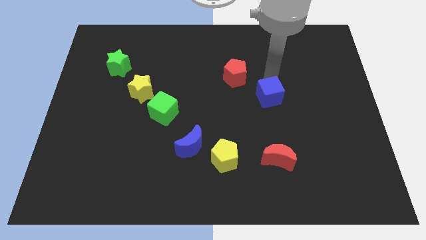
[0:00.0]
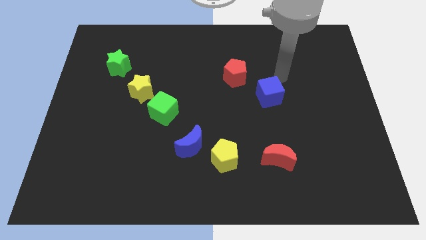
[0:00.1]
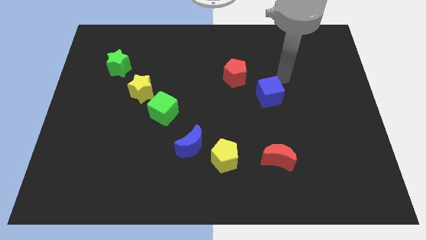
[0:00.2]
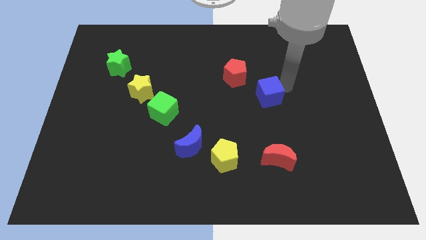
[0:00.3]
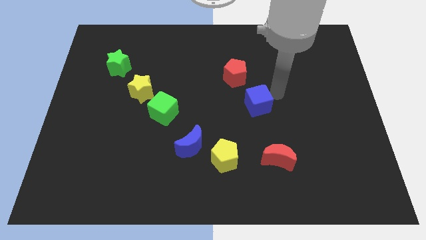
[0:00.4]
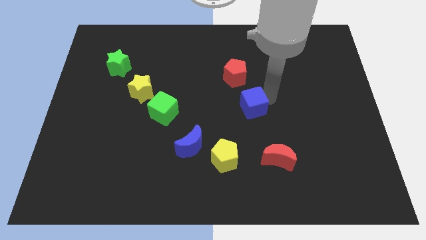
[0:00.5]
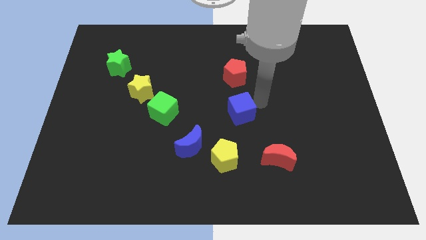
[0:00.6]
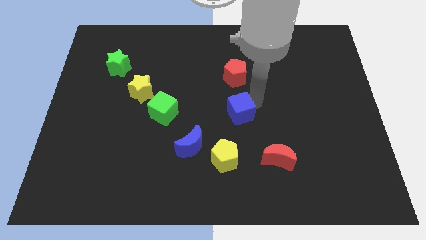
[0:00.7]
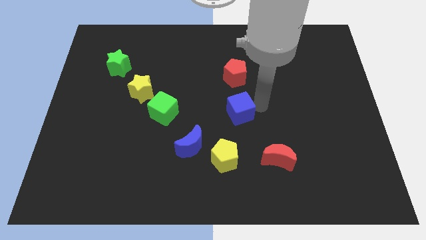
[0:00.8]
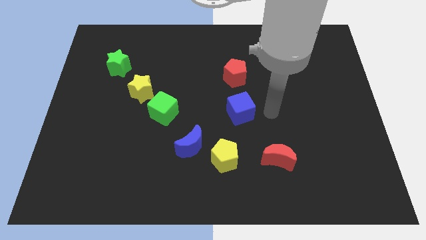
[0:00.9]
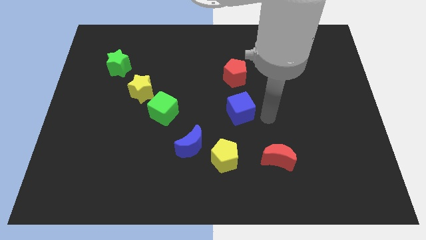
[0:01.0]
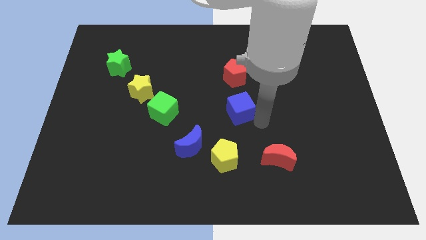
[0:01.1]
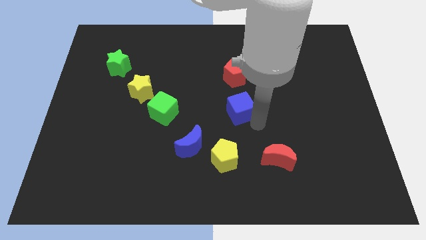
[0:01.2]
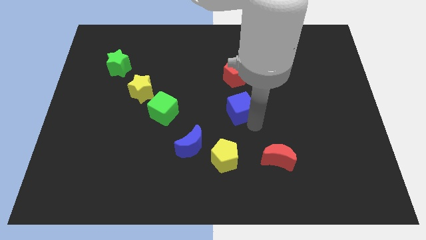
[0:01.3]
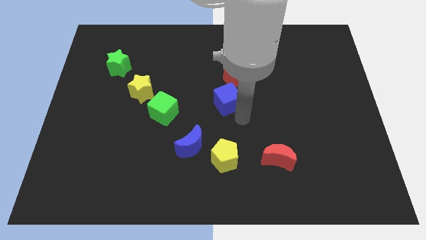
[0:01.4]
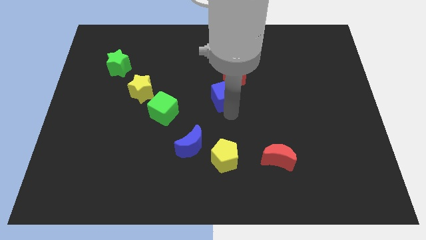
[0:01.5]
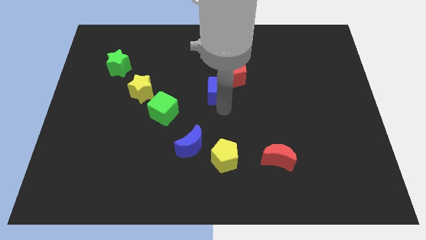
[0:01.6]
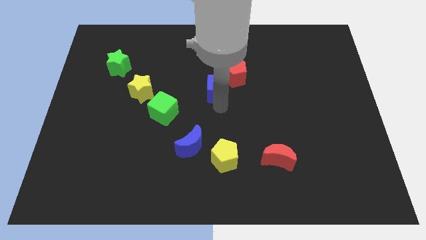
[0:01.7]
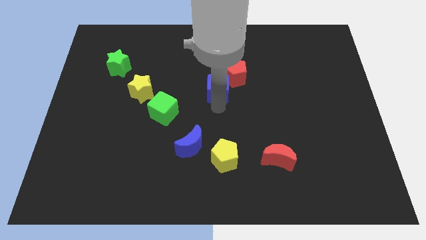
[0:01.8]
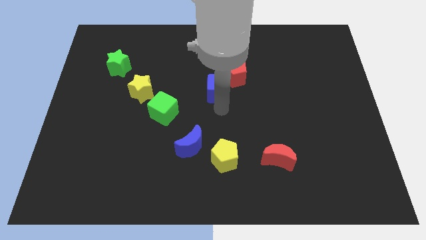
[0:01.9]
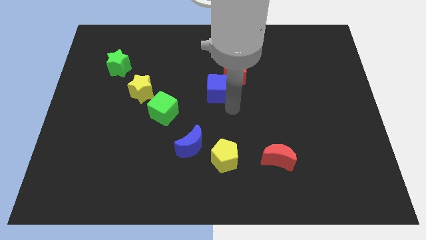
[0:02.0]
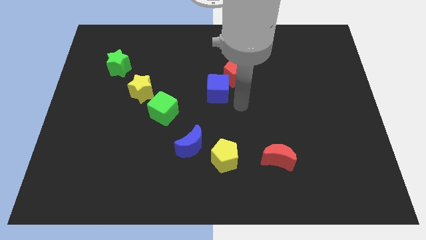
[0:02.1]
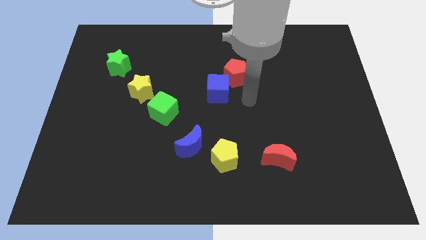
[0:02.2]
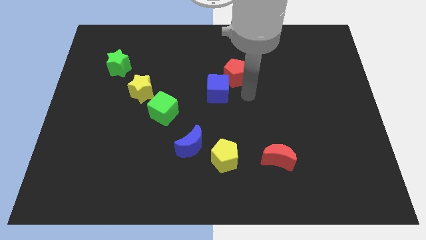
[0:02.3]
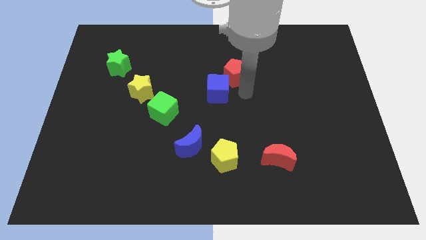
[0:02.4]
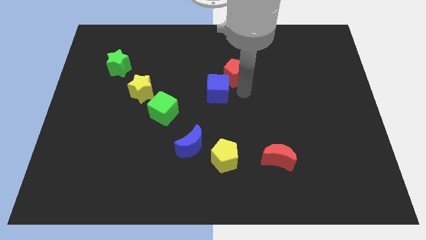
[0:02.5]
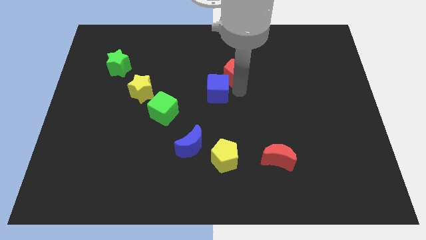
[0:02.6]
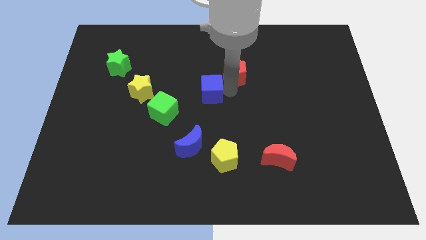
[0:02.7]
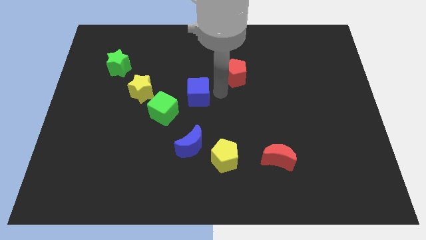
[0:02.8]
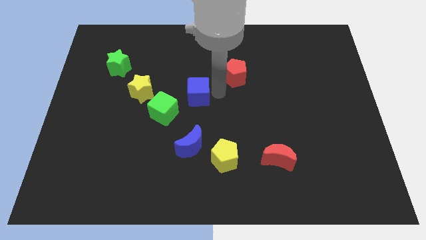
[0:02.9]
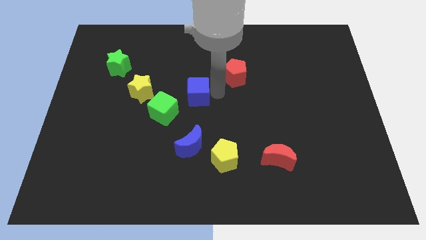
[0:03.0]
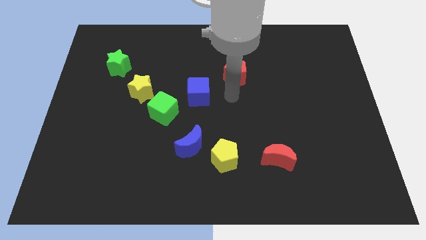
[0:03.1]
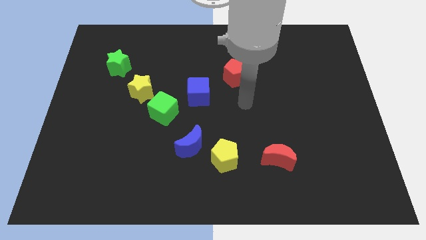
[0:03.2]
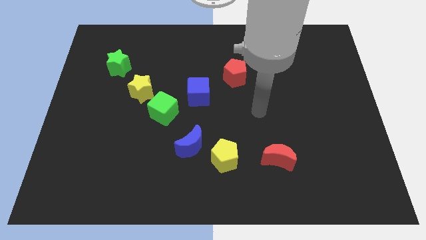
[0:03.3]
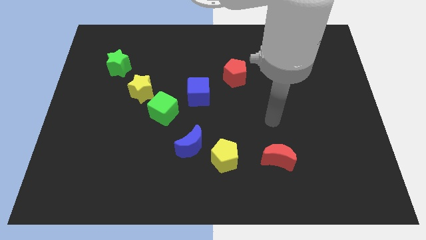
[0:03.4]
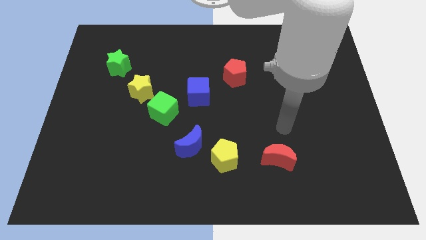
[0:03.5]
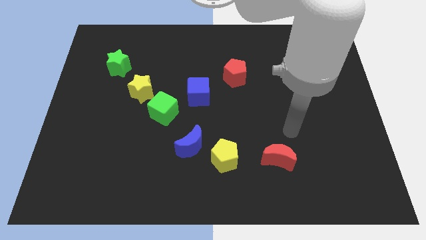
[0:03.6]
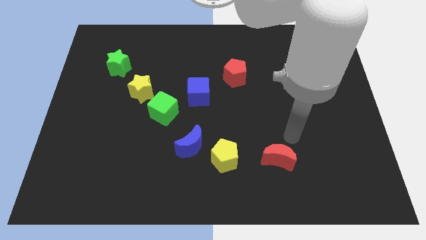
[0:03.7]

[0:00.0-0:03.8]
push the blue cube in between the green cube and the red pentagon

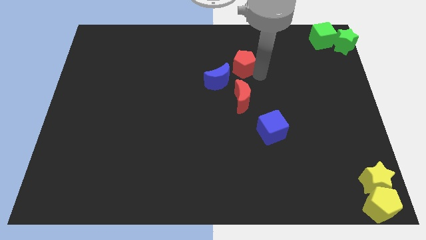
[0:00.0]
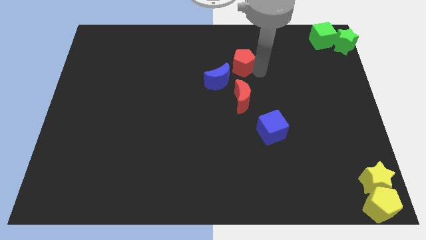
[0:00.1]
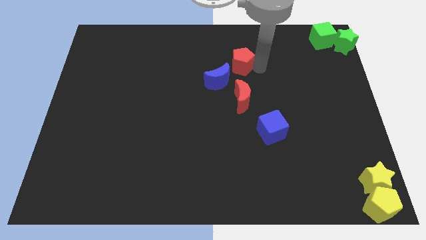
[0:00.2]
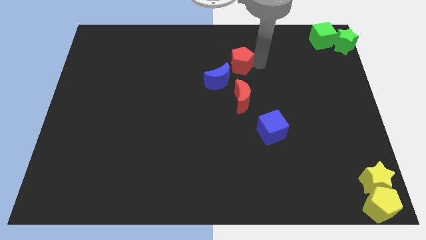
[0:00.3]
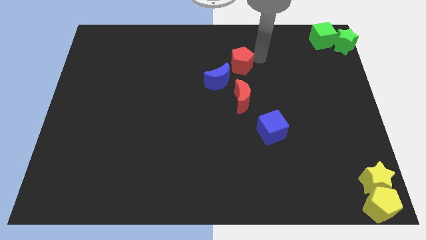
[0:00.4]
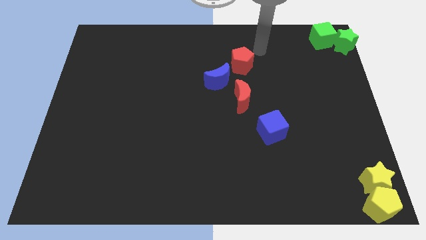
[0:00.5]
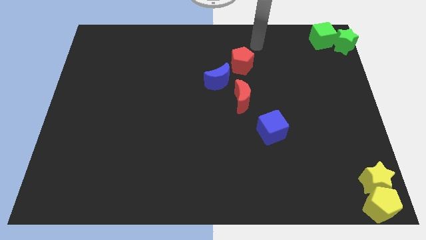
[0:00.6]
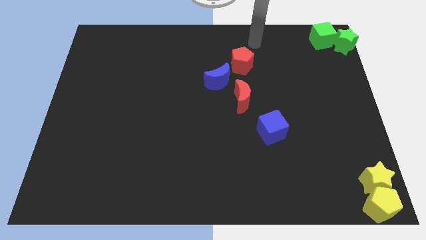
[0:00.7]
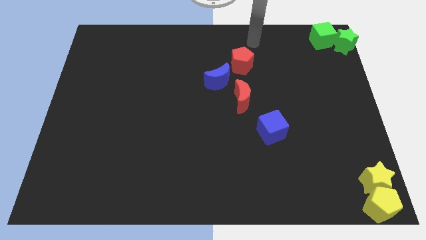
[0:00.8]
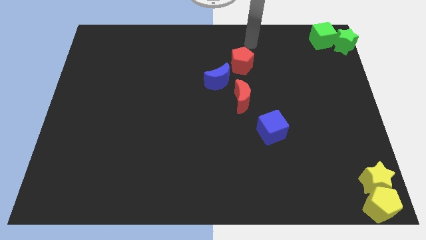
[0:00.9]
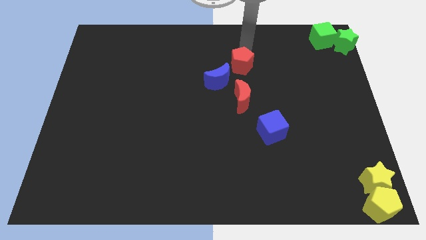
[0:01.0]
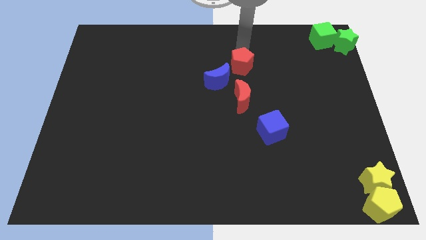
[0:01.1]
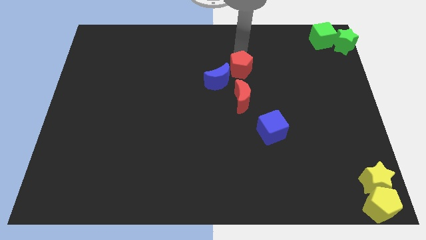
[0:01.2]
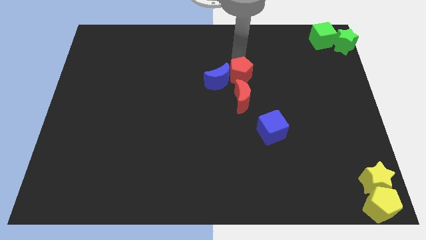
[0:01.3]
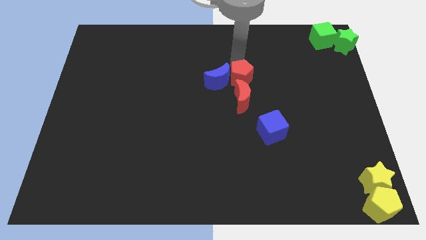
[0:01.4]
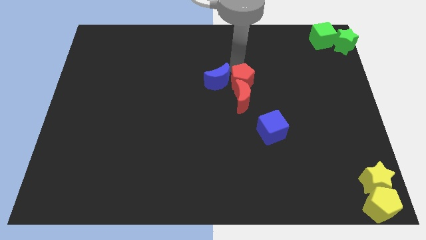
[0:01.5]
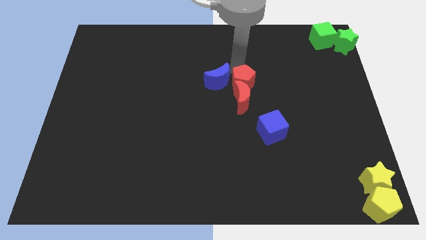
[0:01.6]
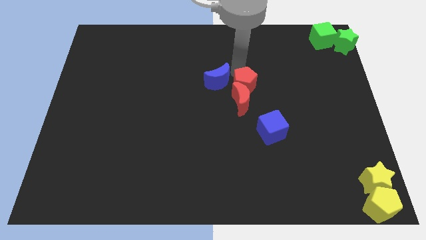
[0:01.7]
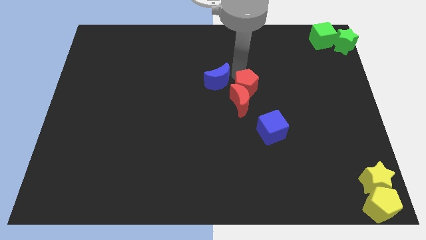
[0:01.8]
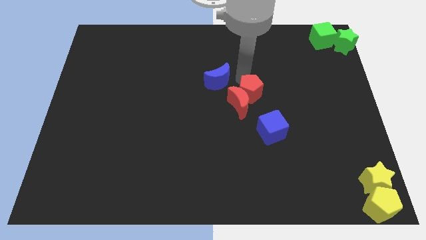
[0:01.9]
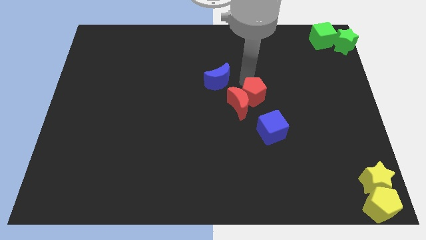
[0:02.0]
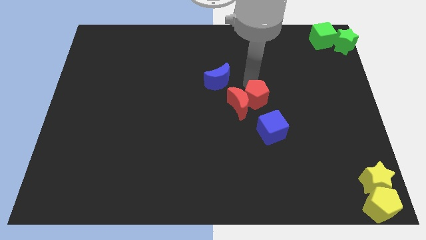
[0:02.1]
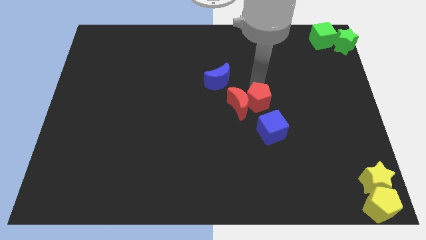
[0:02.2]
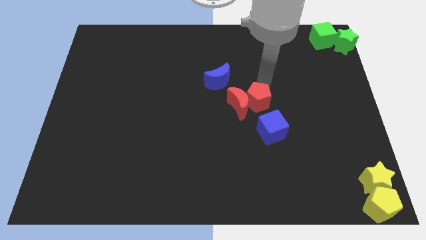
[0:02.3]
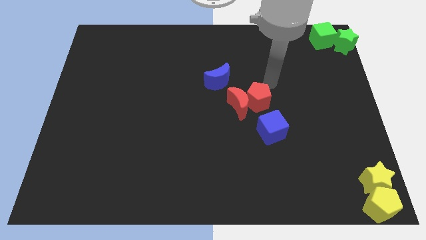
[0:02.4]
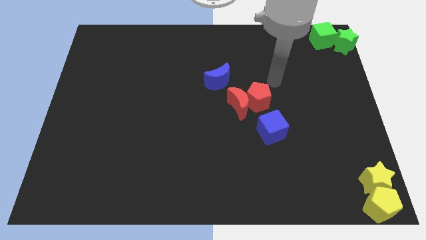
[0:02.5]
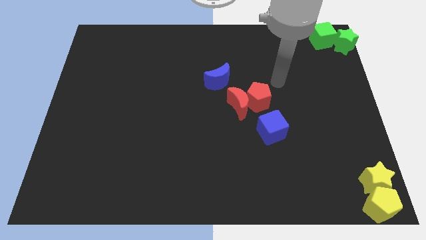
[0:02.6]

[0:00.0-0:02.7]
place the red blocks in between the blue blocks

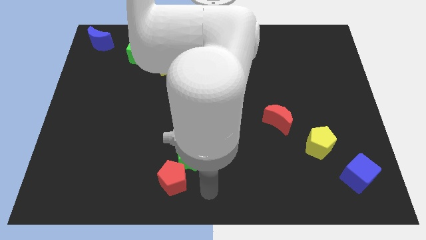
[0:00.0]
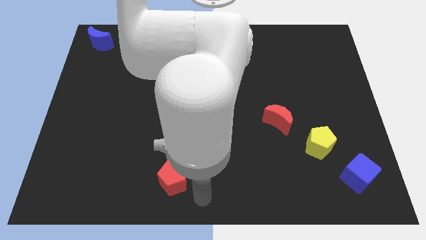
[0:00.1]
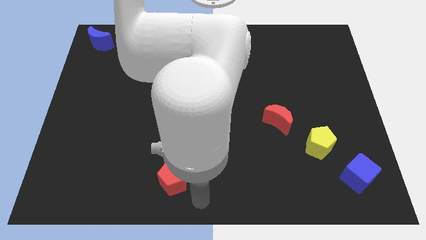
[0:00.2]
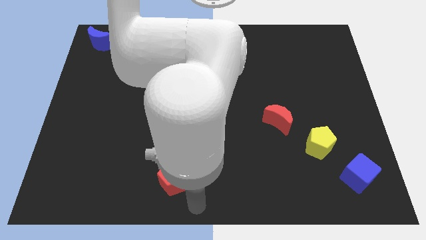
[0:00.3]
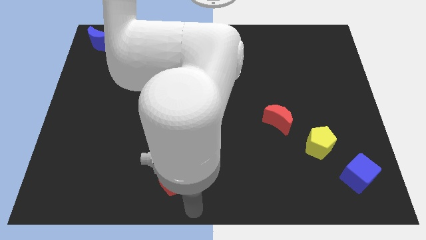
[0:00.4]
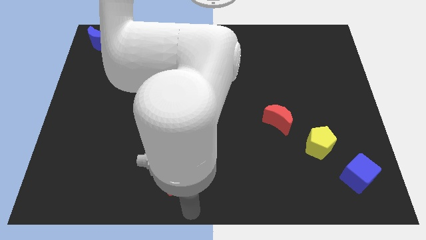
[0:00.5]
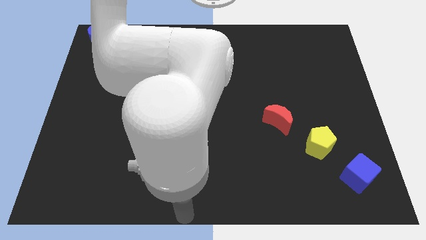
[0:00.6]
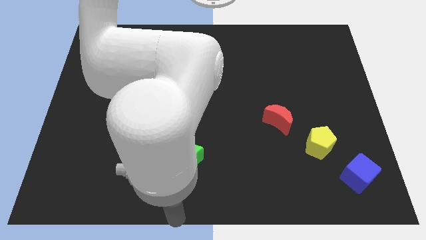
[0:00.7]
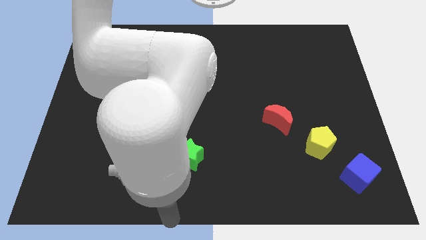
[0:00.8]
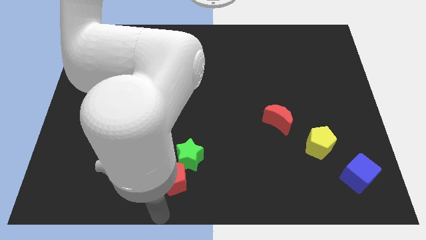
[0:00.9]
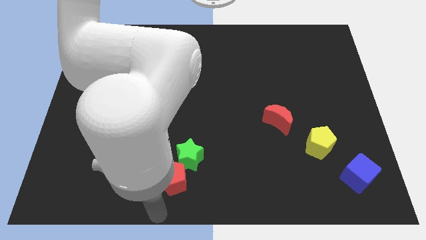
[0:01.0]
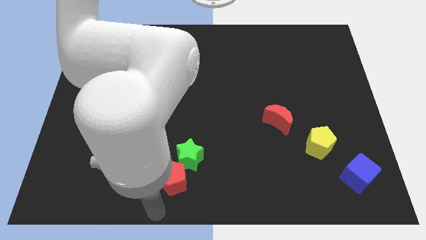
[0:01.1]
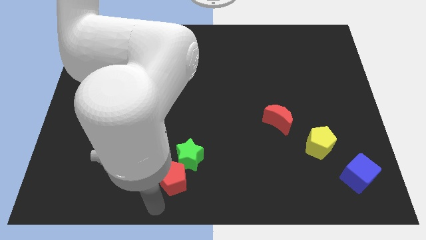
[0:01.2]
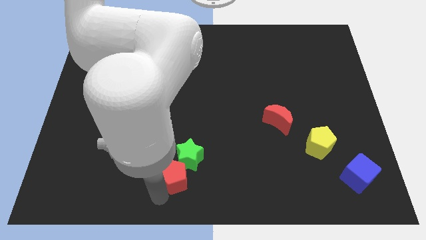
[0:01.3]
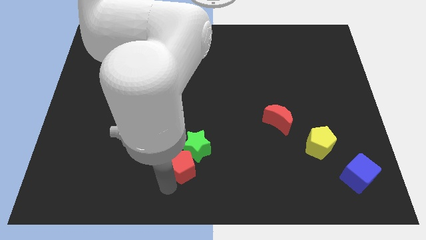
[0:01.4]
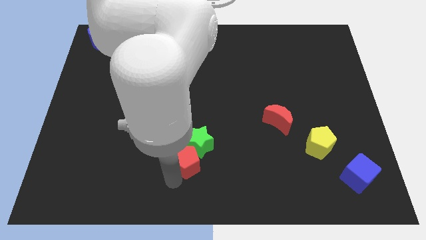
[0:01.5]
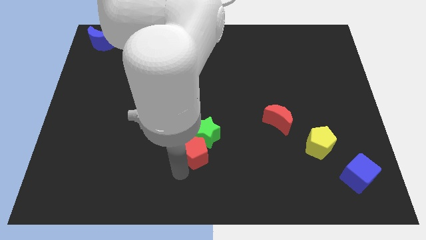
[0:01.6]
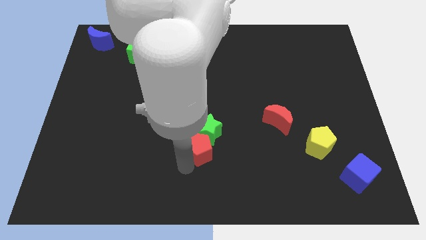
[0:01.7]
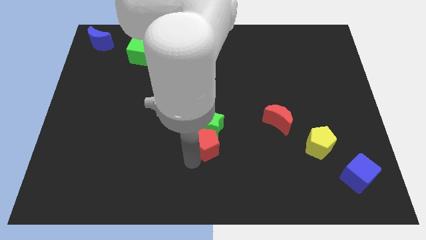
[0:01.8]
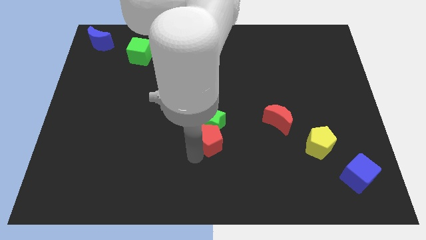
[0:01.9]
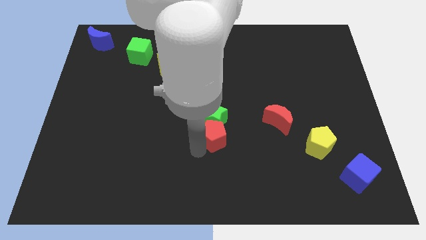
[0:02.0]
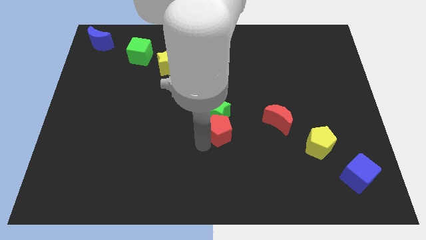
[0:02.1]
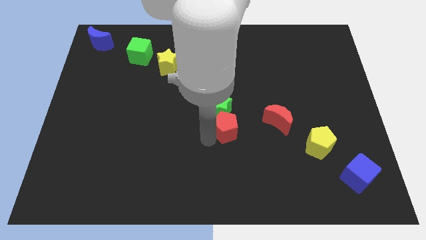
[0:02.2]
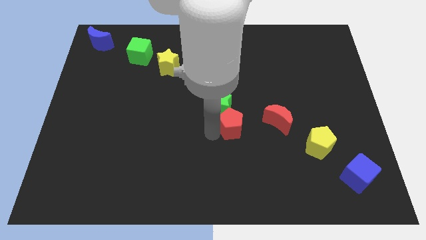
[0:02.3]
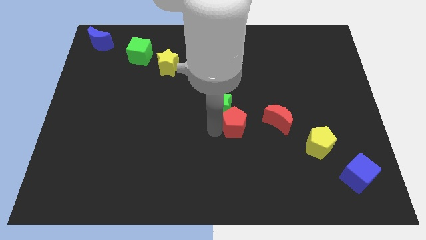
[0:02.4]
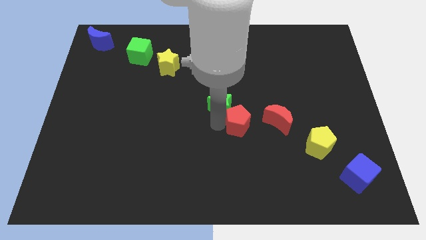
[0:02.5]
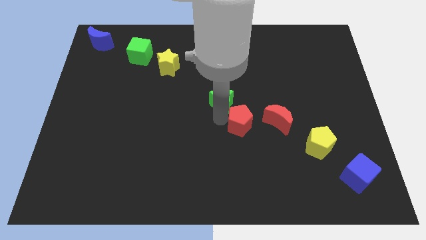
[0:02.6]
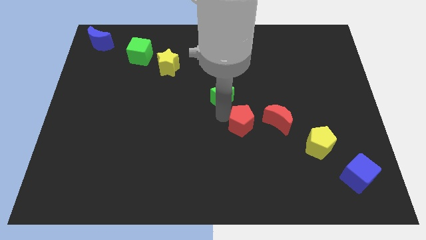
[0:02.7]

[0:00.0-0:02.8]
push the red and green block towards the top
